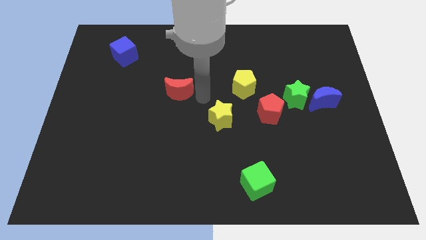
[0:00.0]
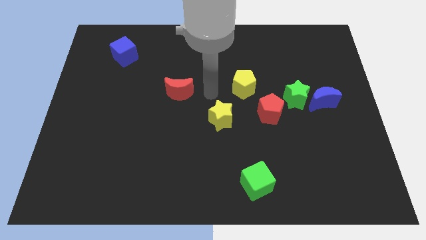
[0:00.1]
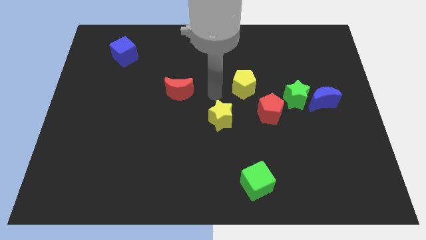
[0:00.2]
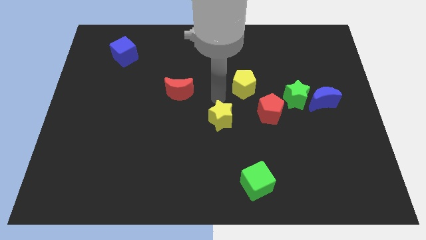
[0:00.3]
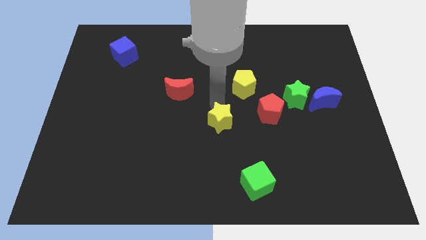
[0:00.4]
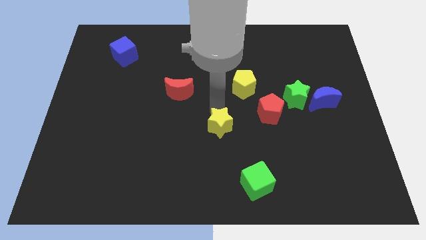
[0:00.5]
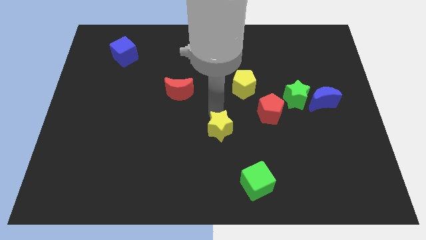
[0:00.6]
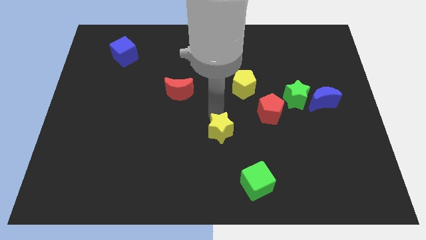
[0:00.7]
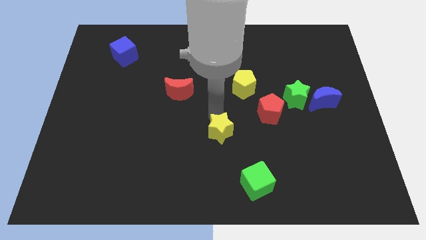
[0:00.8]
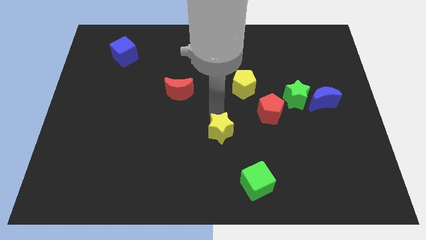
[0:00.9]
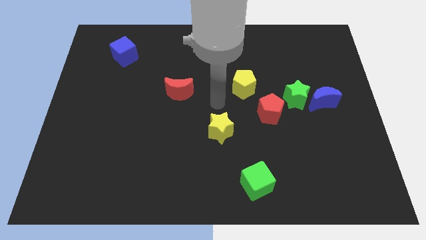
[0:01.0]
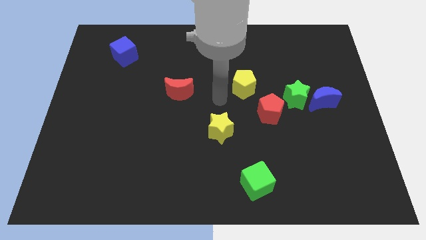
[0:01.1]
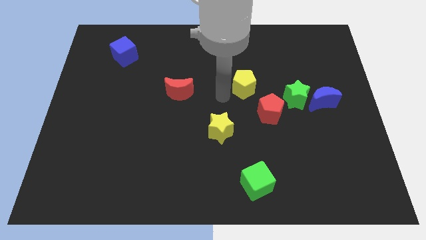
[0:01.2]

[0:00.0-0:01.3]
move the yellow star slightly to the down

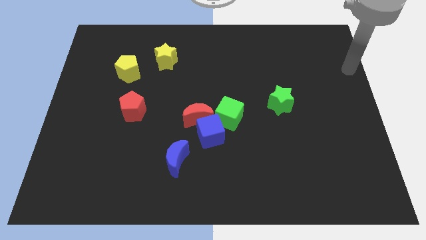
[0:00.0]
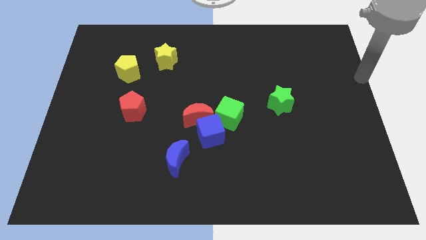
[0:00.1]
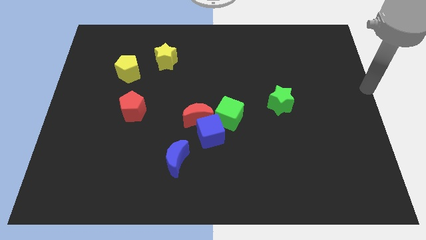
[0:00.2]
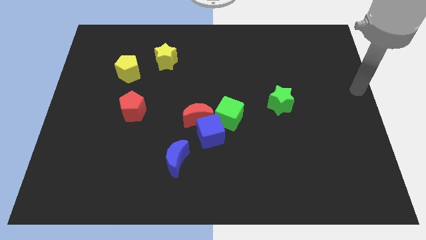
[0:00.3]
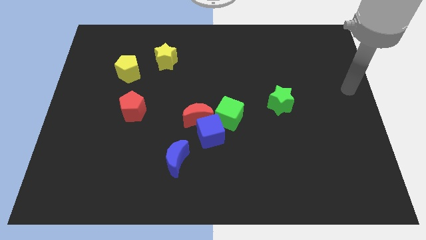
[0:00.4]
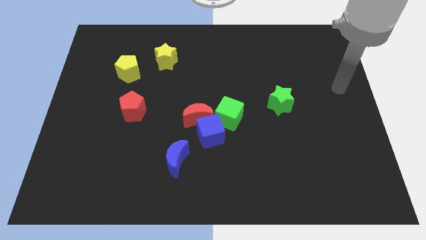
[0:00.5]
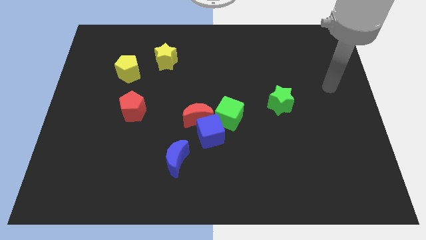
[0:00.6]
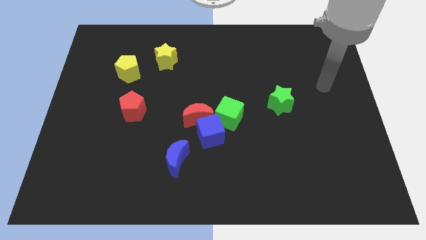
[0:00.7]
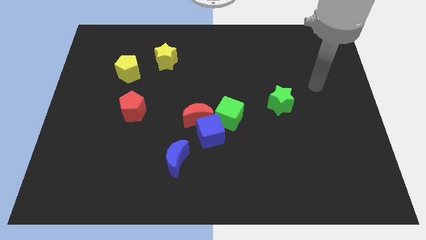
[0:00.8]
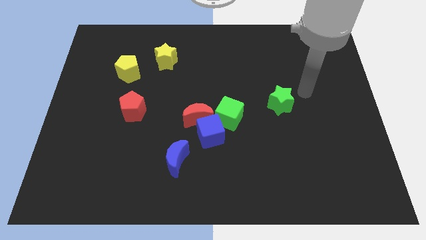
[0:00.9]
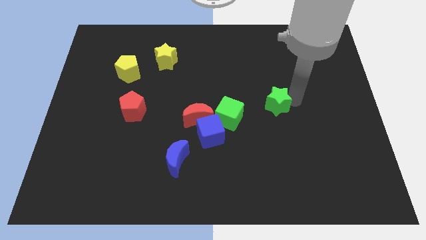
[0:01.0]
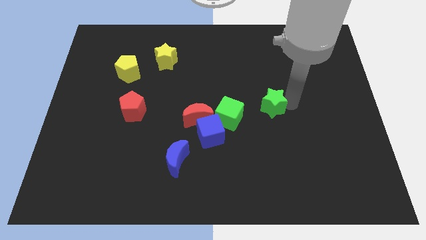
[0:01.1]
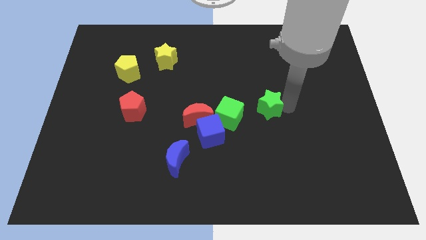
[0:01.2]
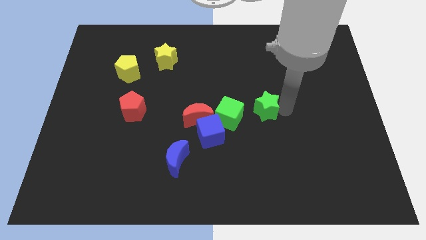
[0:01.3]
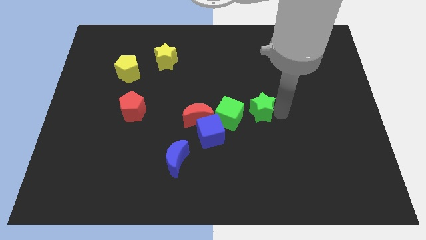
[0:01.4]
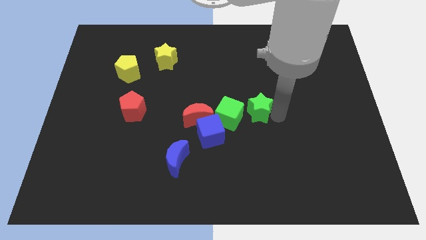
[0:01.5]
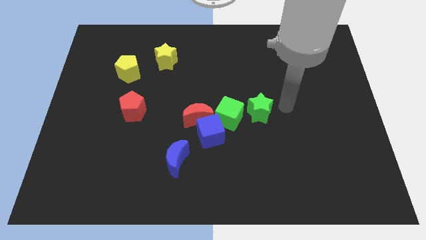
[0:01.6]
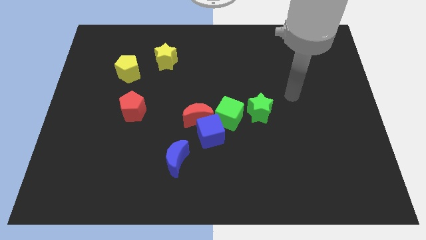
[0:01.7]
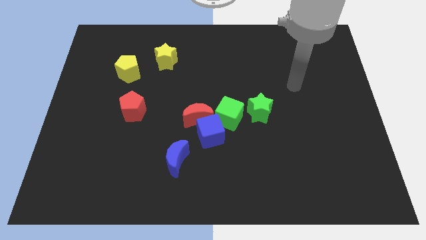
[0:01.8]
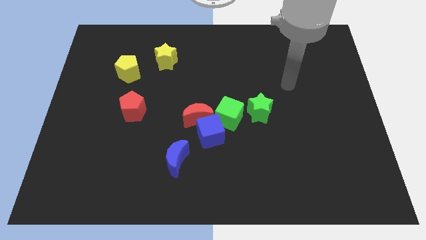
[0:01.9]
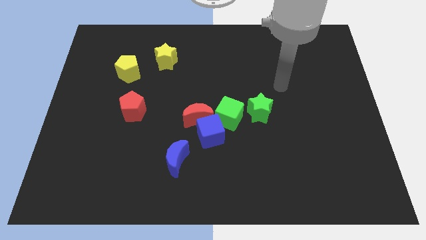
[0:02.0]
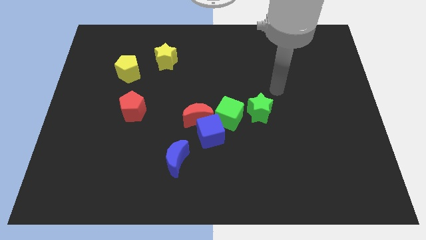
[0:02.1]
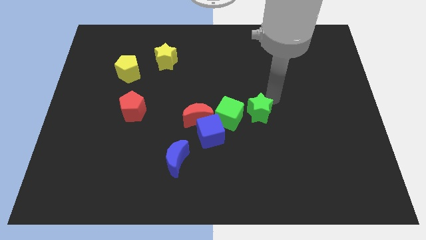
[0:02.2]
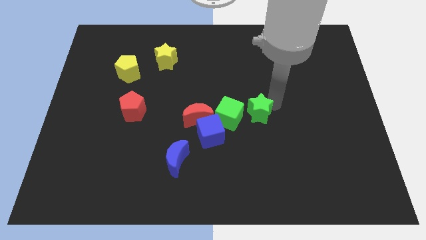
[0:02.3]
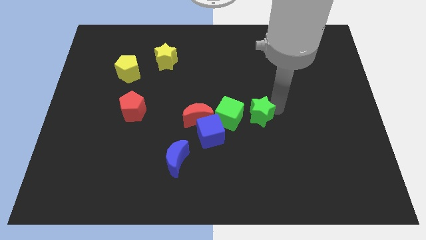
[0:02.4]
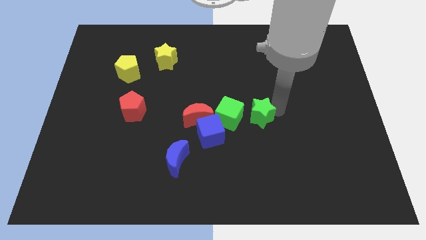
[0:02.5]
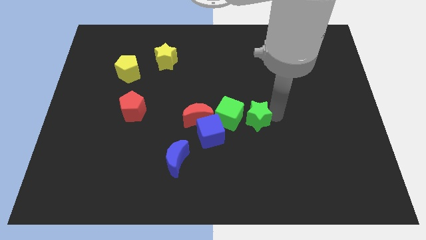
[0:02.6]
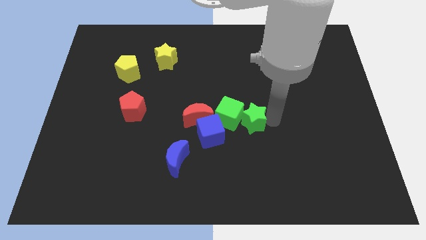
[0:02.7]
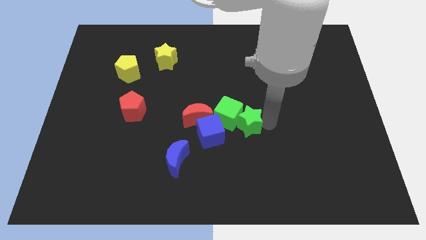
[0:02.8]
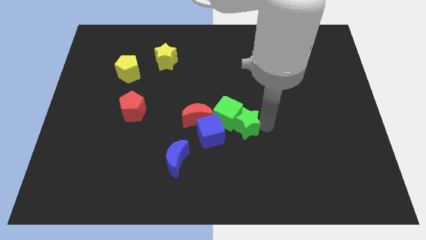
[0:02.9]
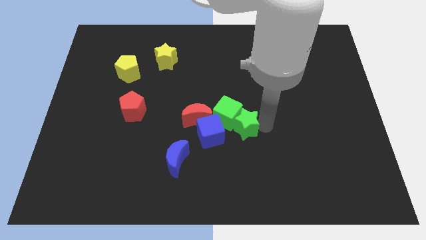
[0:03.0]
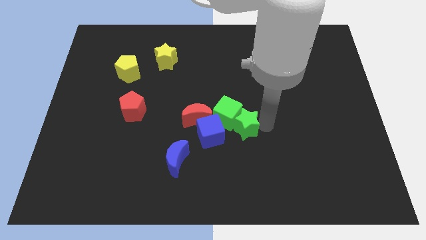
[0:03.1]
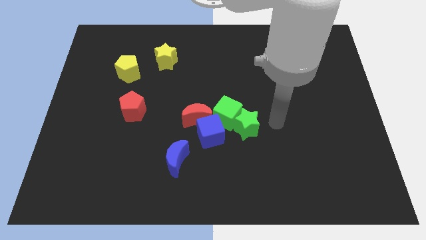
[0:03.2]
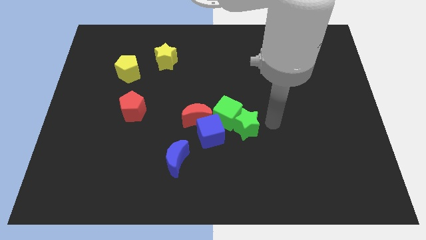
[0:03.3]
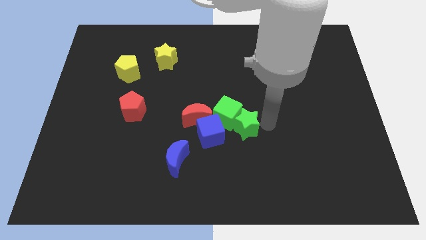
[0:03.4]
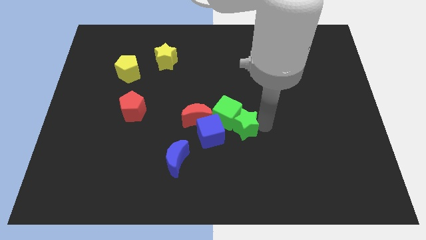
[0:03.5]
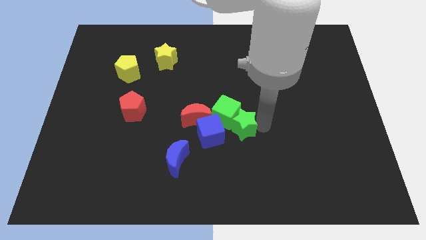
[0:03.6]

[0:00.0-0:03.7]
push the green star into green cube

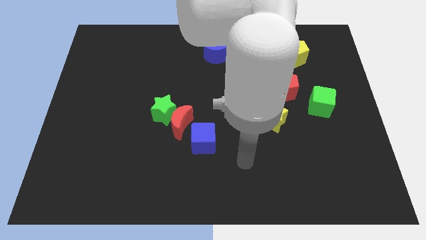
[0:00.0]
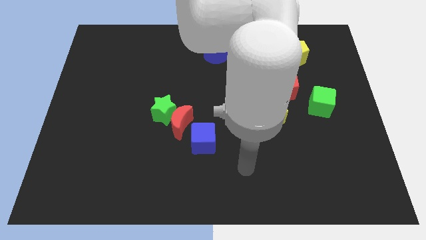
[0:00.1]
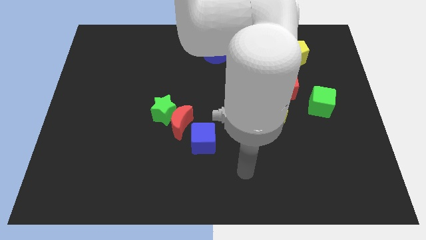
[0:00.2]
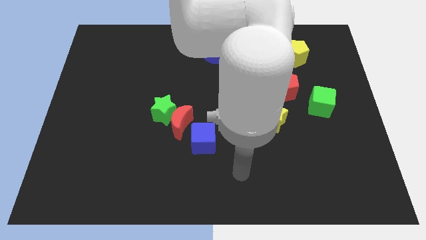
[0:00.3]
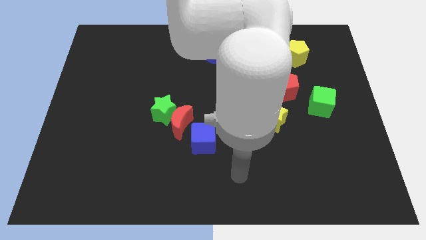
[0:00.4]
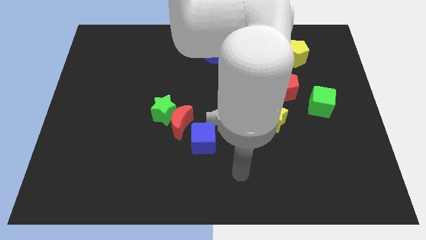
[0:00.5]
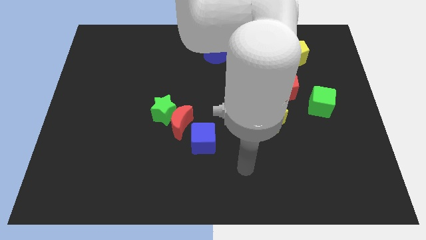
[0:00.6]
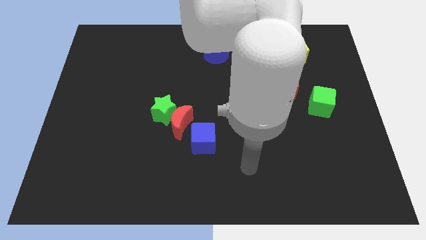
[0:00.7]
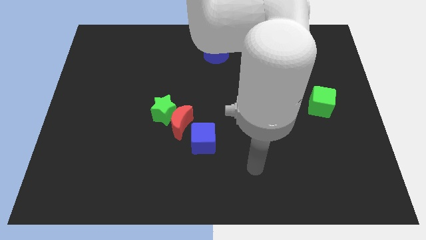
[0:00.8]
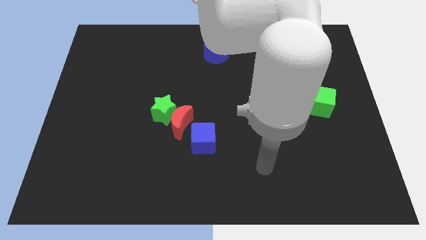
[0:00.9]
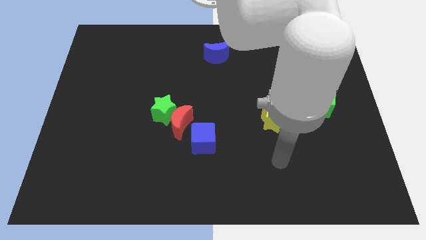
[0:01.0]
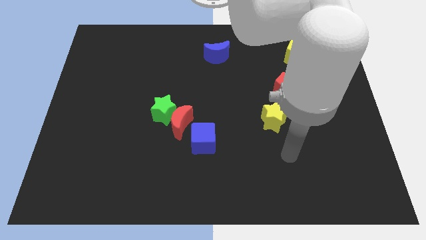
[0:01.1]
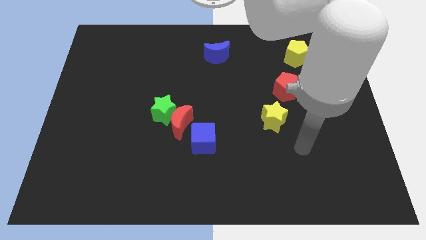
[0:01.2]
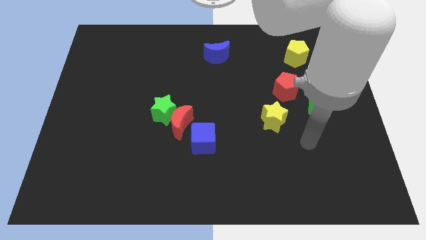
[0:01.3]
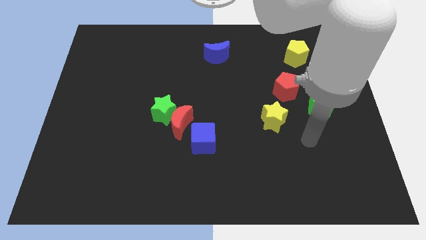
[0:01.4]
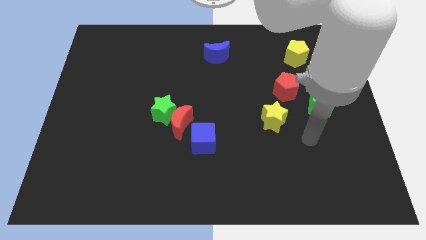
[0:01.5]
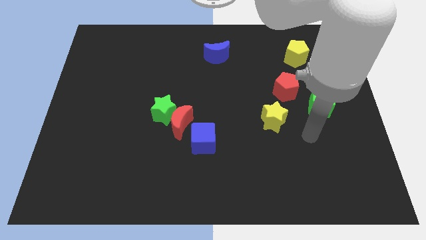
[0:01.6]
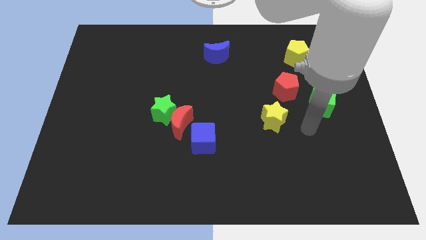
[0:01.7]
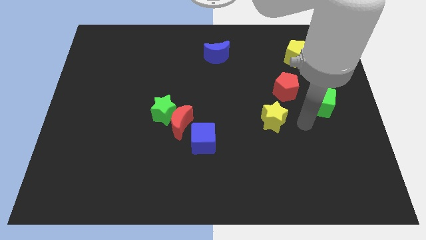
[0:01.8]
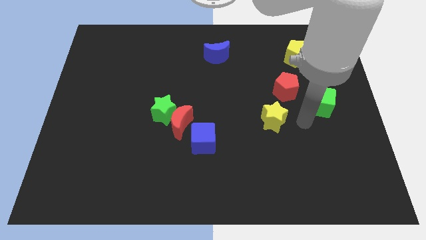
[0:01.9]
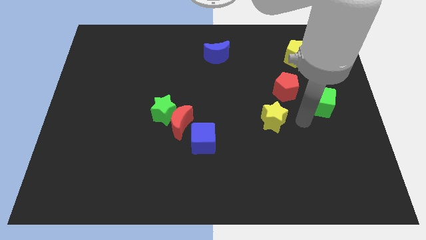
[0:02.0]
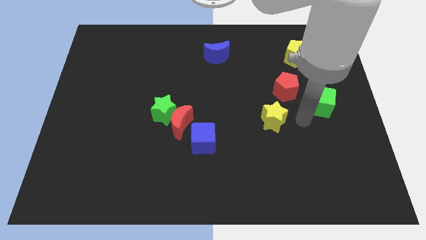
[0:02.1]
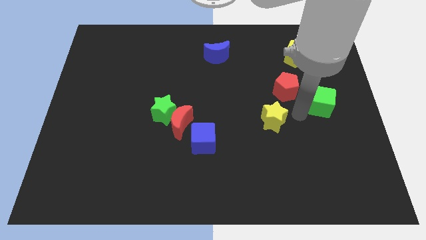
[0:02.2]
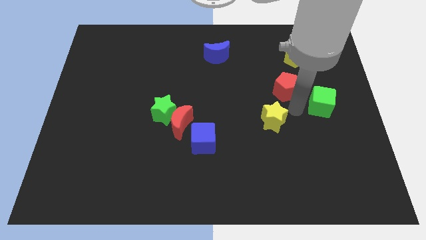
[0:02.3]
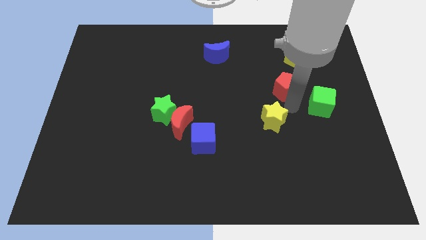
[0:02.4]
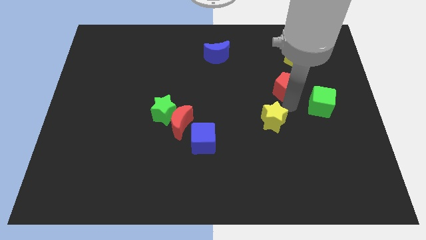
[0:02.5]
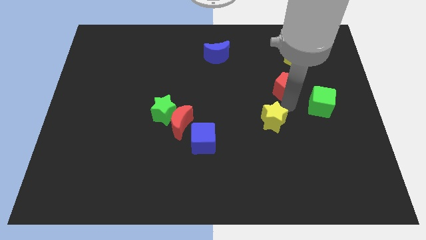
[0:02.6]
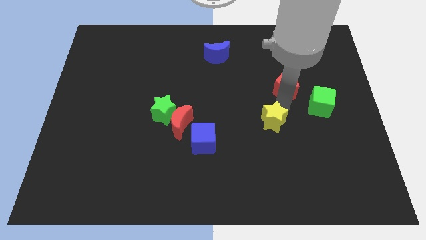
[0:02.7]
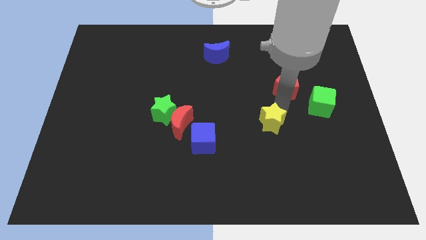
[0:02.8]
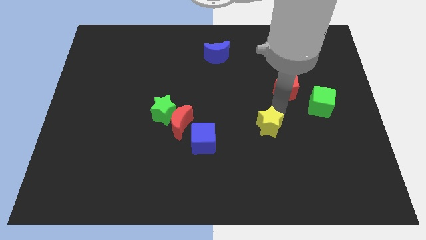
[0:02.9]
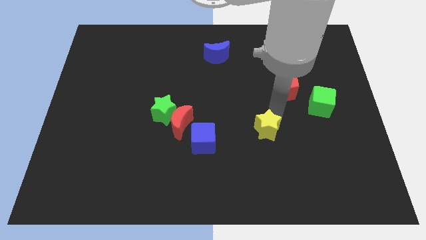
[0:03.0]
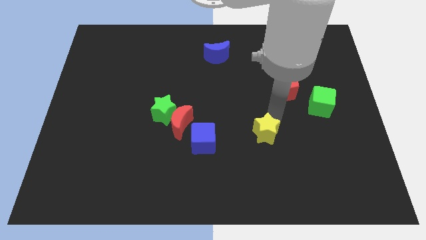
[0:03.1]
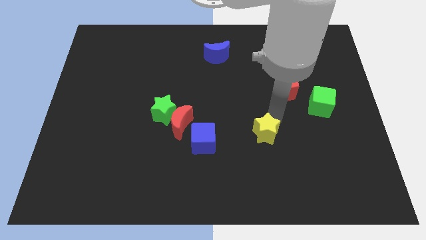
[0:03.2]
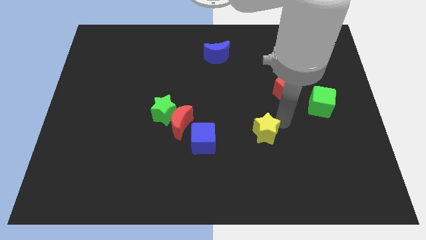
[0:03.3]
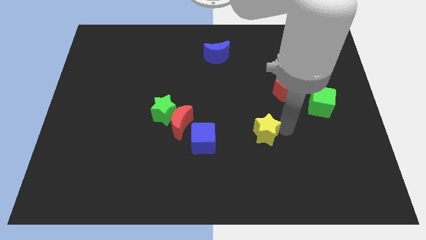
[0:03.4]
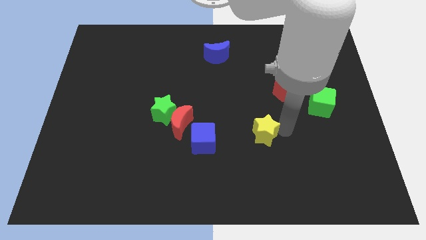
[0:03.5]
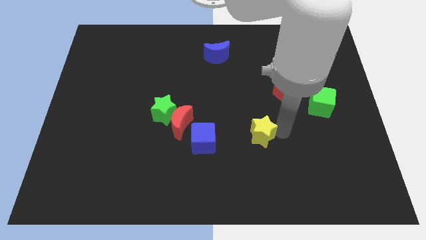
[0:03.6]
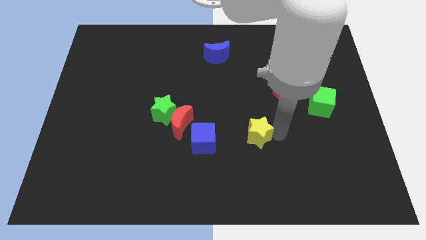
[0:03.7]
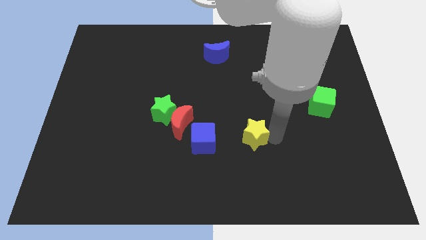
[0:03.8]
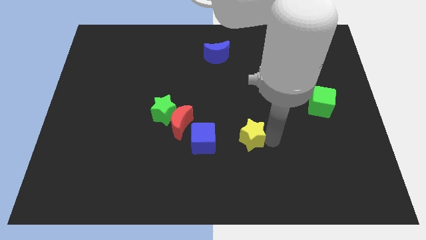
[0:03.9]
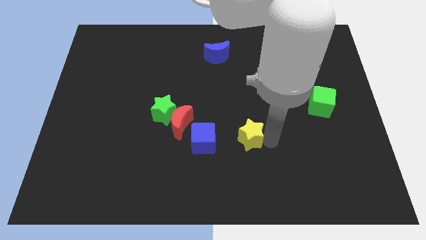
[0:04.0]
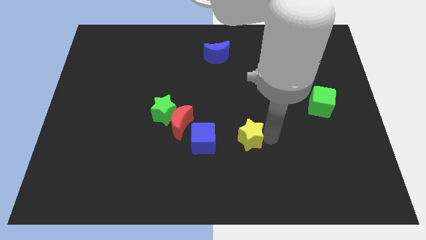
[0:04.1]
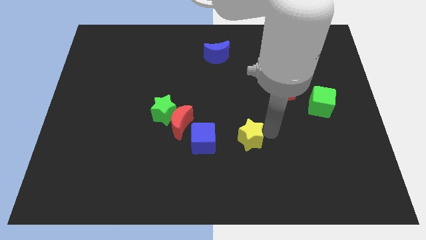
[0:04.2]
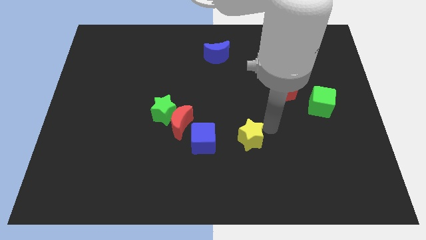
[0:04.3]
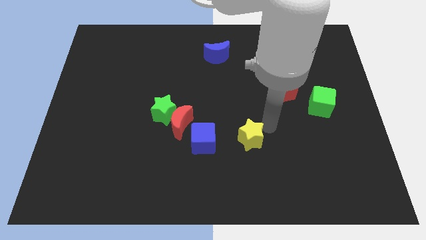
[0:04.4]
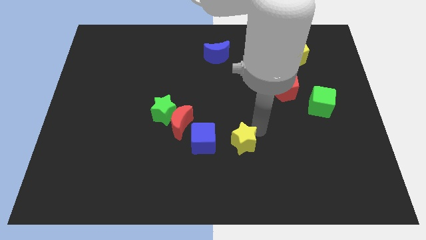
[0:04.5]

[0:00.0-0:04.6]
place the yellow star parallel to blue cube
